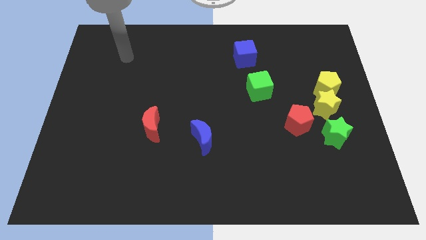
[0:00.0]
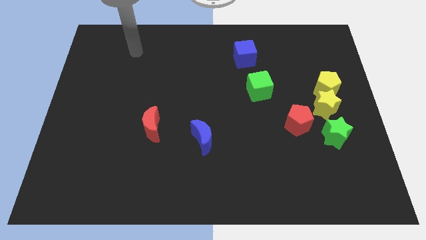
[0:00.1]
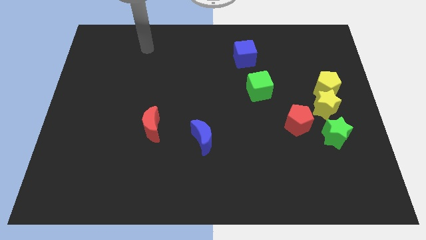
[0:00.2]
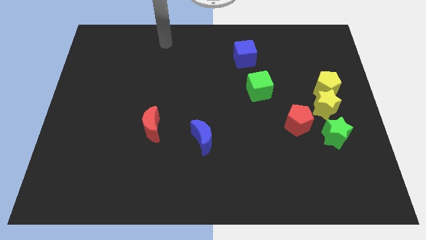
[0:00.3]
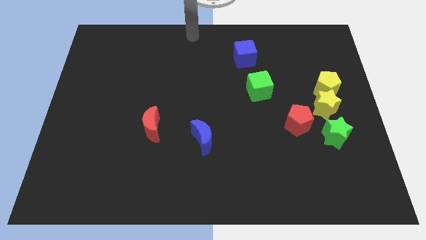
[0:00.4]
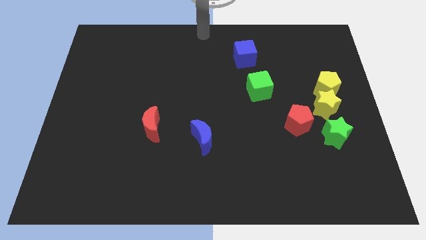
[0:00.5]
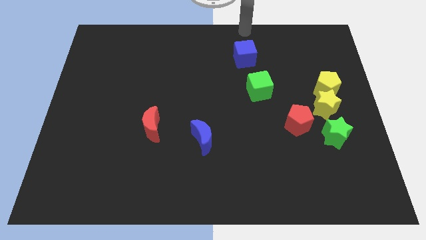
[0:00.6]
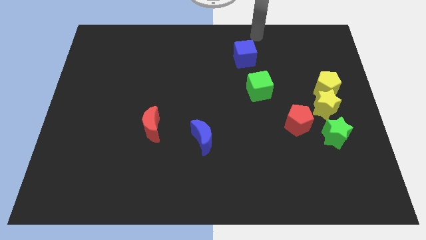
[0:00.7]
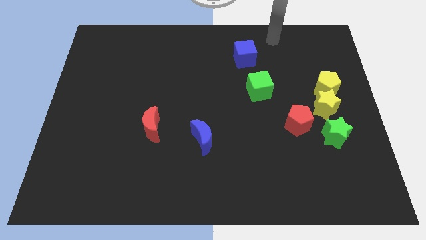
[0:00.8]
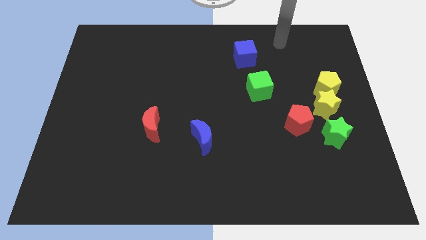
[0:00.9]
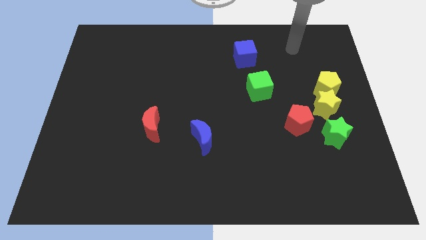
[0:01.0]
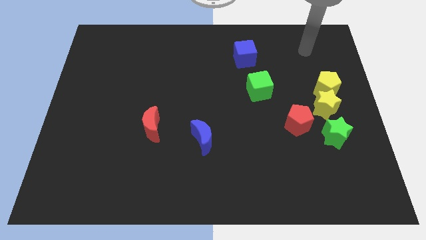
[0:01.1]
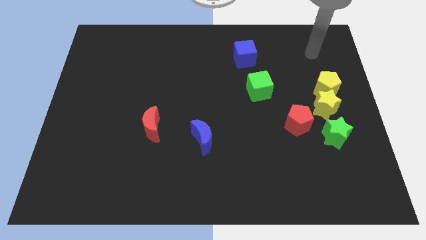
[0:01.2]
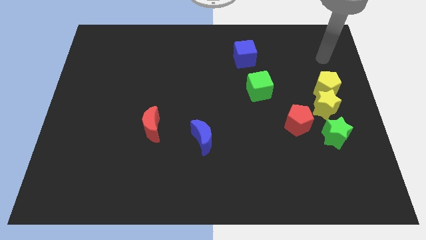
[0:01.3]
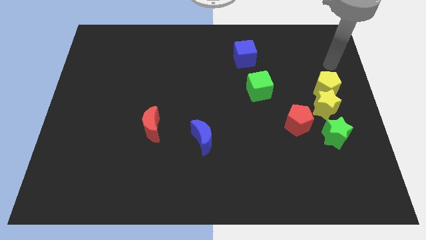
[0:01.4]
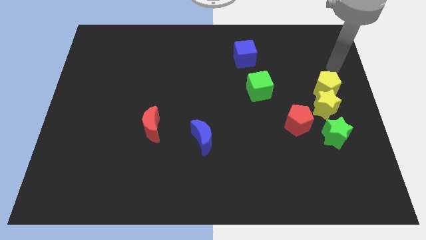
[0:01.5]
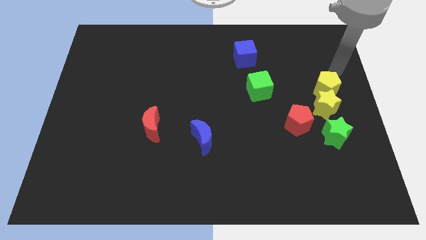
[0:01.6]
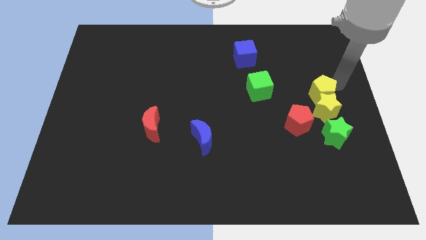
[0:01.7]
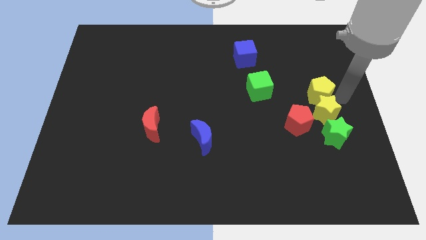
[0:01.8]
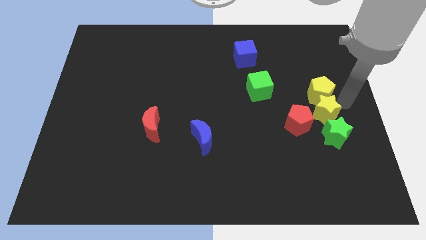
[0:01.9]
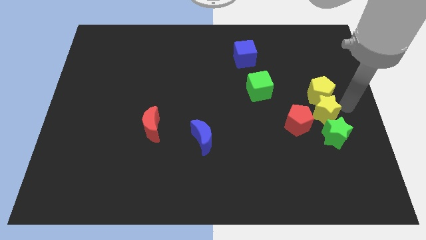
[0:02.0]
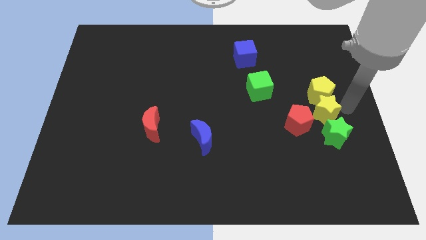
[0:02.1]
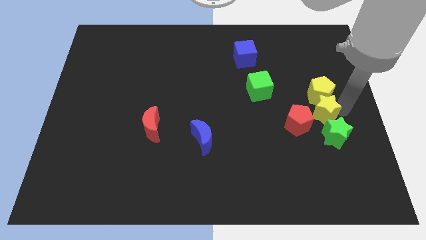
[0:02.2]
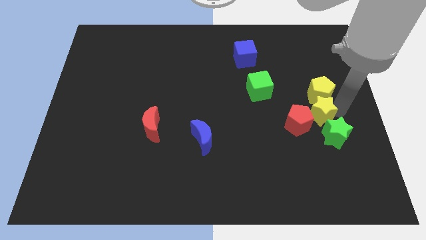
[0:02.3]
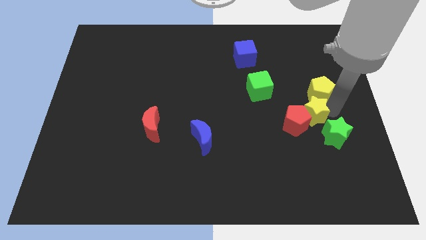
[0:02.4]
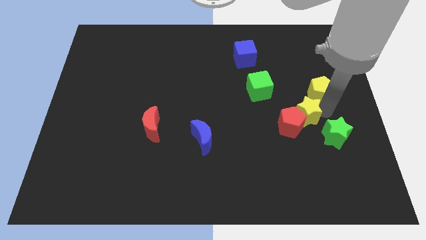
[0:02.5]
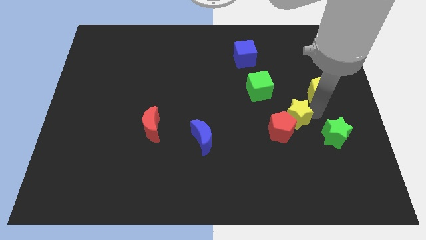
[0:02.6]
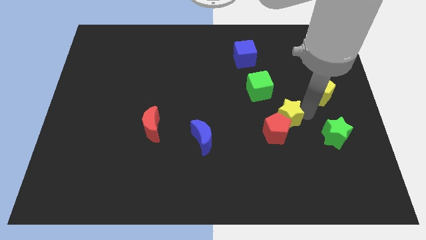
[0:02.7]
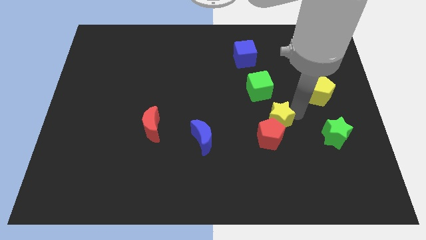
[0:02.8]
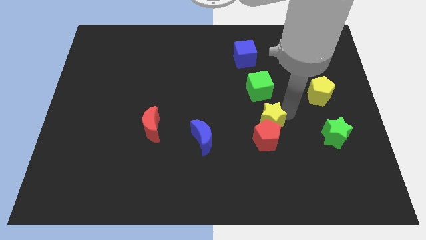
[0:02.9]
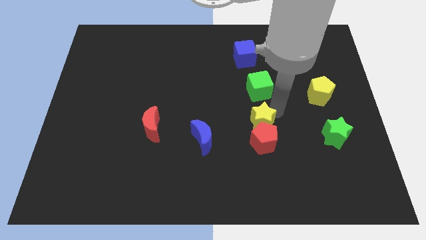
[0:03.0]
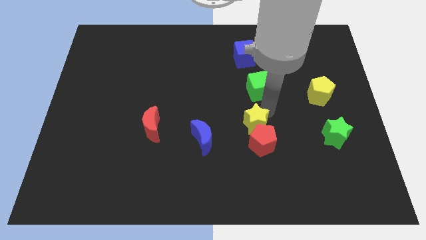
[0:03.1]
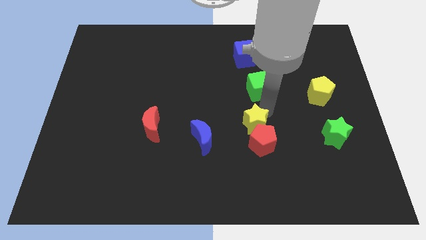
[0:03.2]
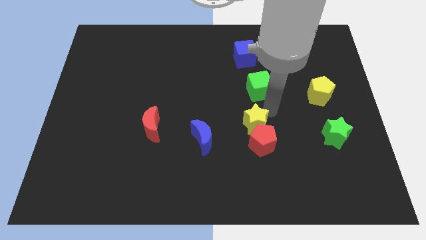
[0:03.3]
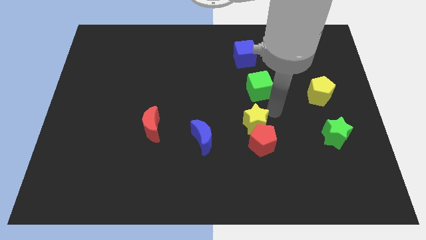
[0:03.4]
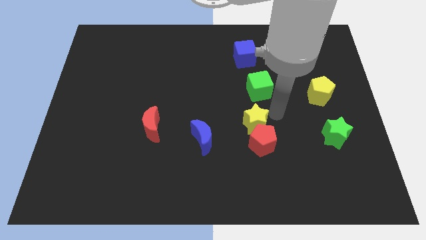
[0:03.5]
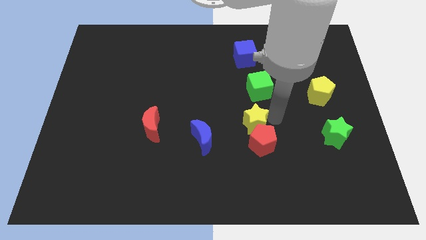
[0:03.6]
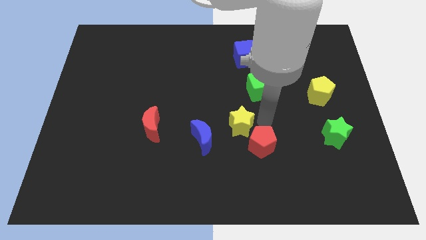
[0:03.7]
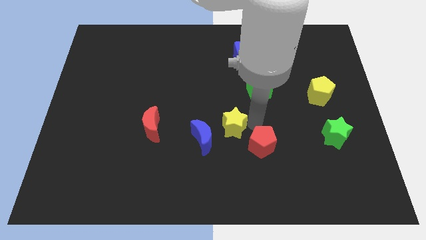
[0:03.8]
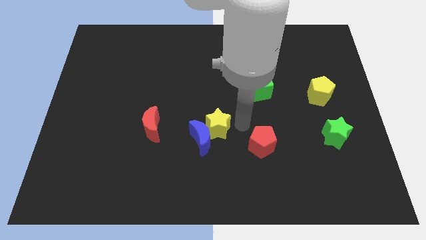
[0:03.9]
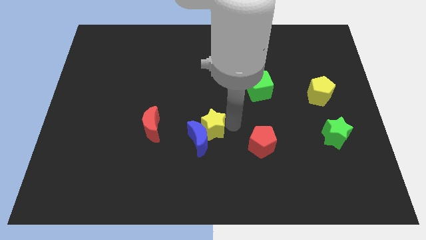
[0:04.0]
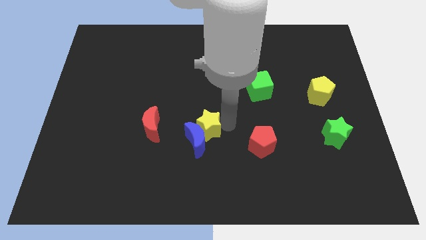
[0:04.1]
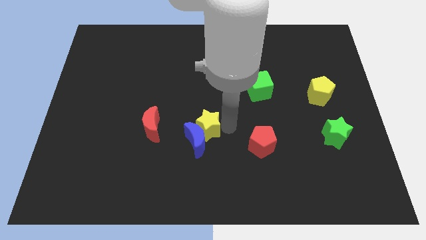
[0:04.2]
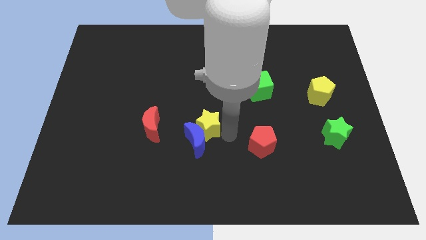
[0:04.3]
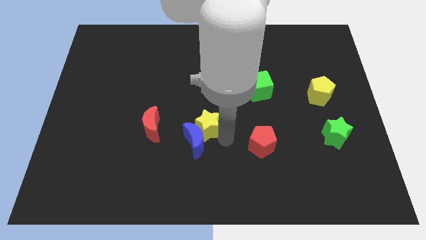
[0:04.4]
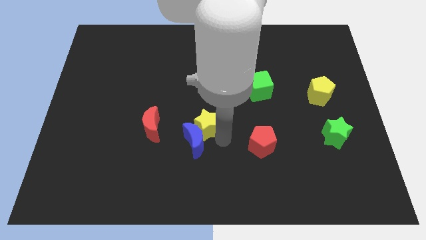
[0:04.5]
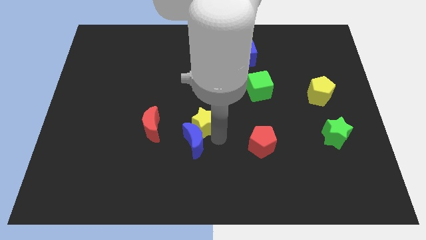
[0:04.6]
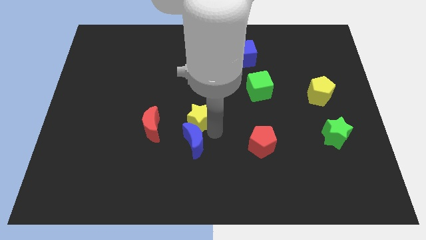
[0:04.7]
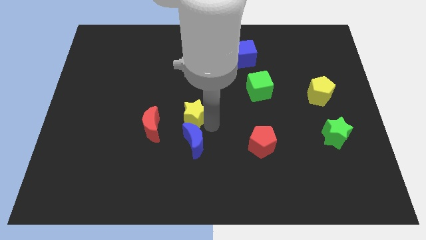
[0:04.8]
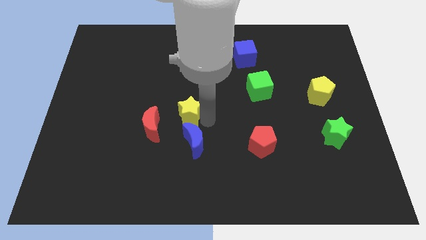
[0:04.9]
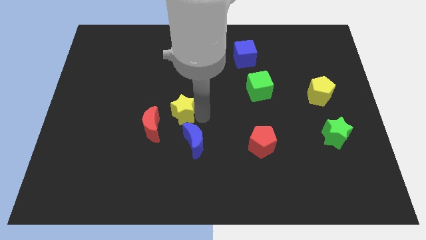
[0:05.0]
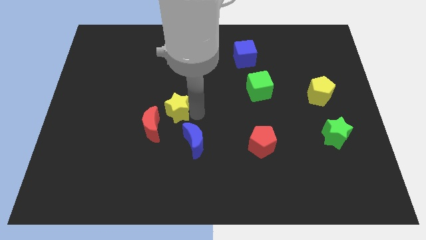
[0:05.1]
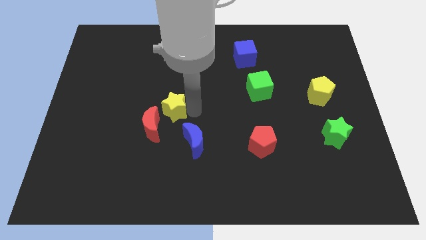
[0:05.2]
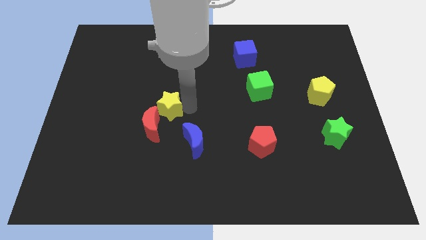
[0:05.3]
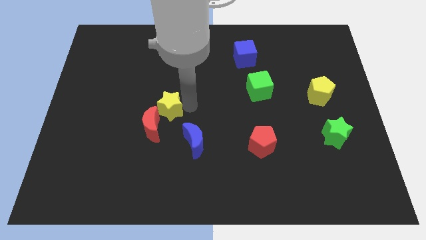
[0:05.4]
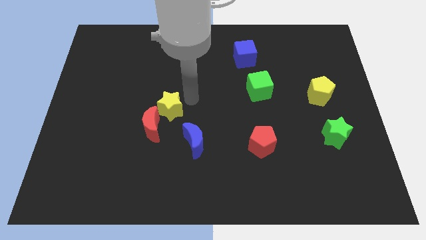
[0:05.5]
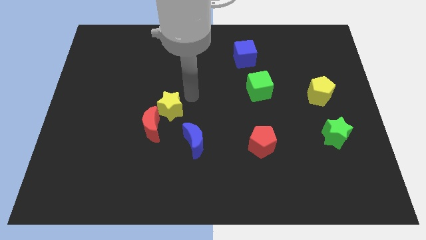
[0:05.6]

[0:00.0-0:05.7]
push the yellow star close to the red moon

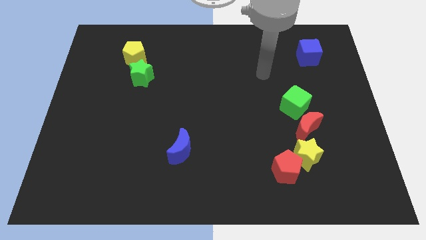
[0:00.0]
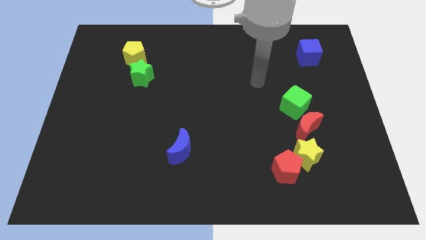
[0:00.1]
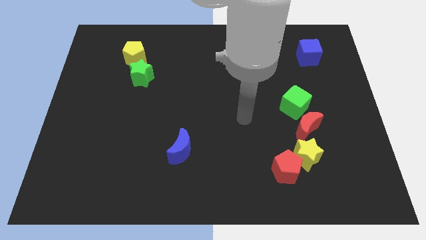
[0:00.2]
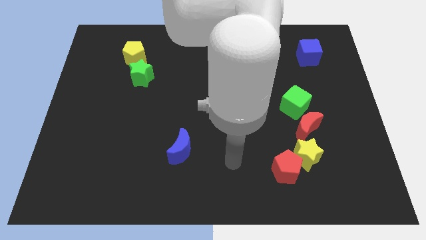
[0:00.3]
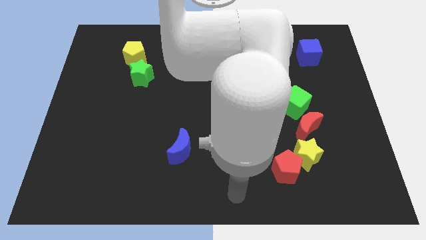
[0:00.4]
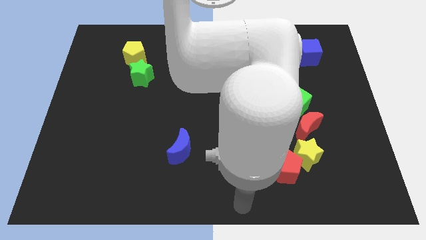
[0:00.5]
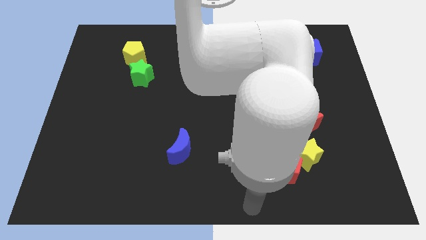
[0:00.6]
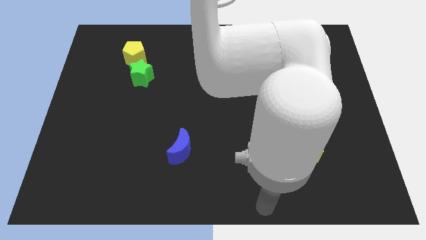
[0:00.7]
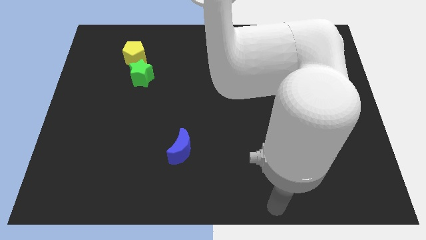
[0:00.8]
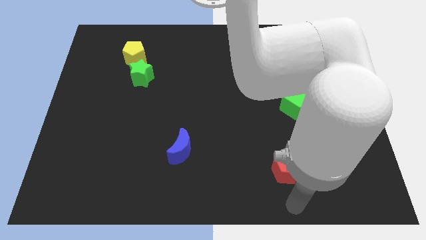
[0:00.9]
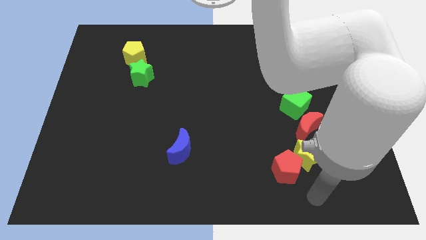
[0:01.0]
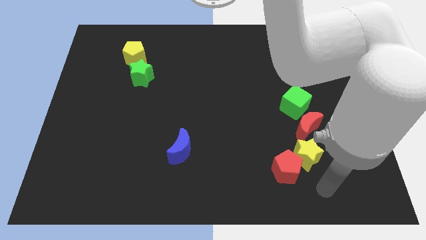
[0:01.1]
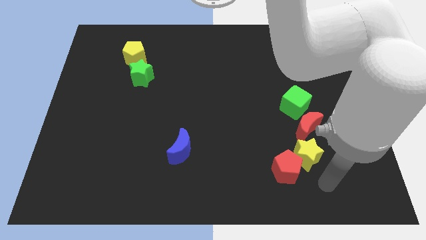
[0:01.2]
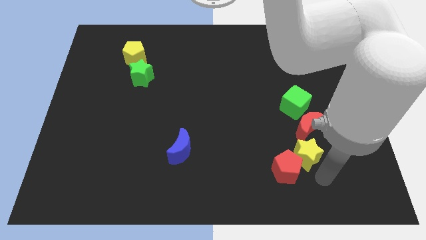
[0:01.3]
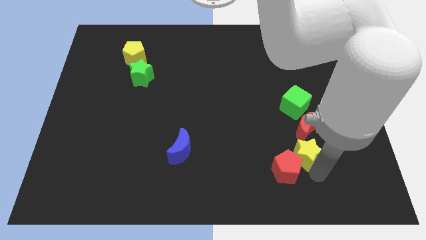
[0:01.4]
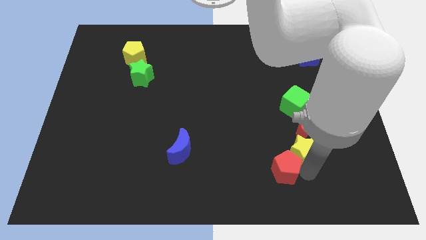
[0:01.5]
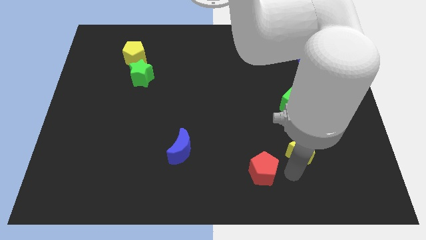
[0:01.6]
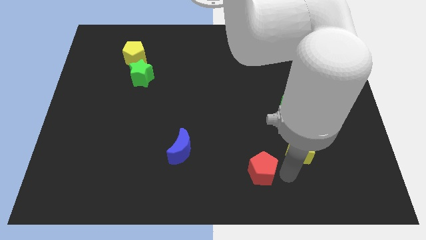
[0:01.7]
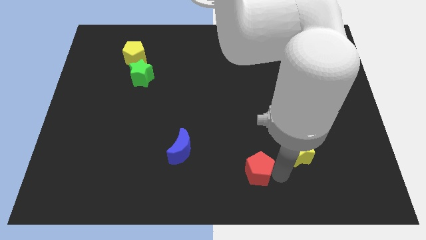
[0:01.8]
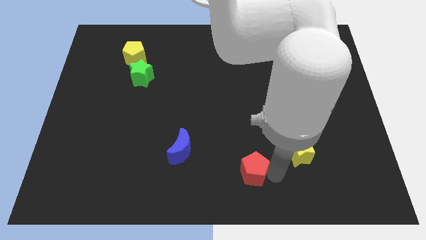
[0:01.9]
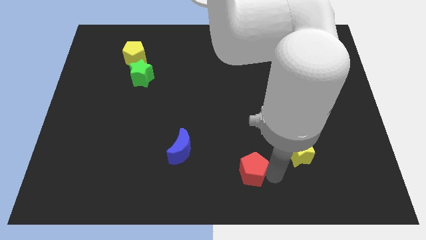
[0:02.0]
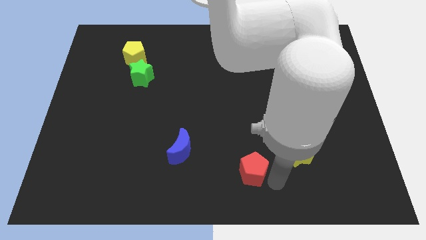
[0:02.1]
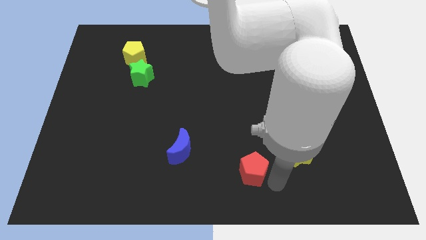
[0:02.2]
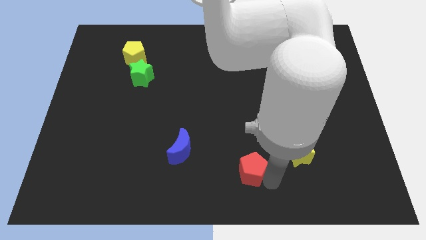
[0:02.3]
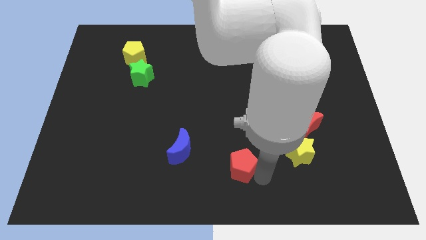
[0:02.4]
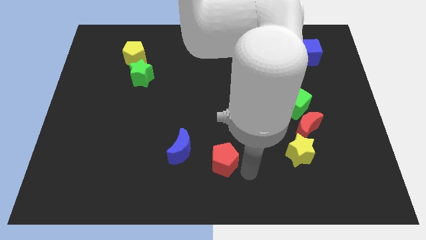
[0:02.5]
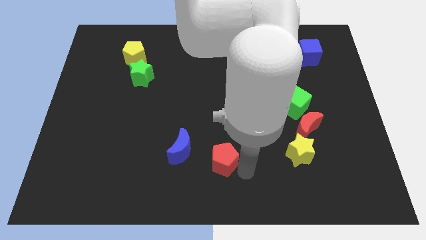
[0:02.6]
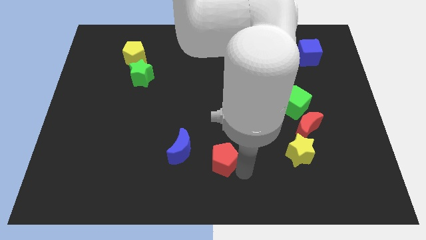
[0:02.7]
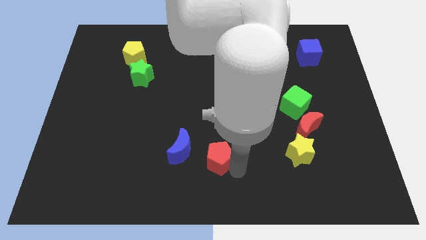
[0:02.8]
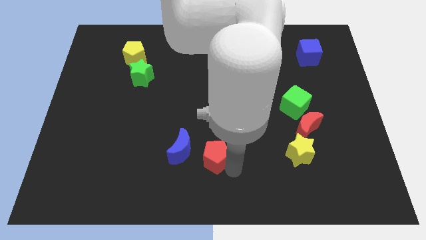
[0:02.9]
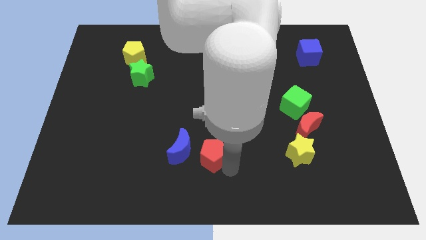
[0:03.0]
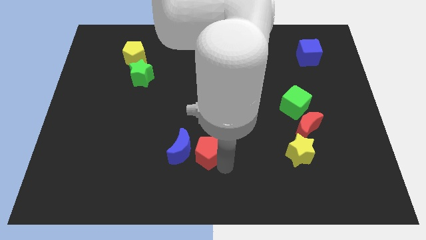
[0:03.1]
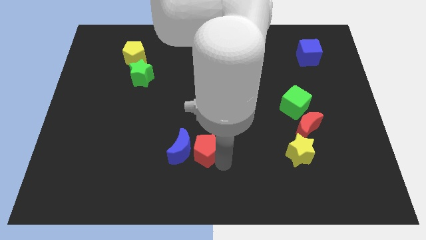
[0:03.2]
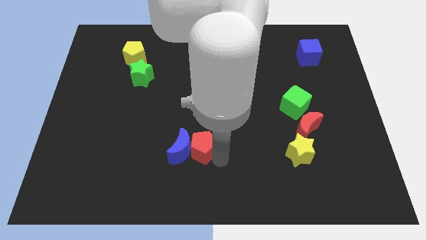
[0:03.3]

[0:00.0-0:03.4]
slide the red pentagon to the blue moon
